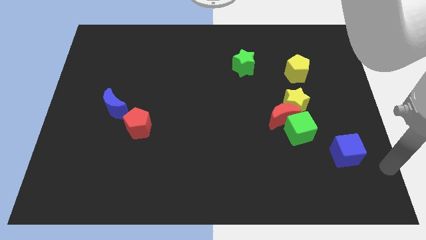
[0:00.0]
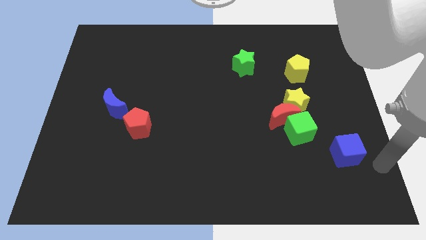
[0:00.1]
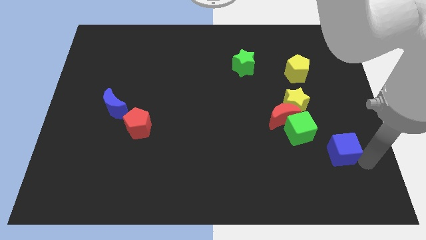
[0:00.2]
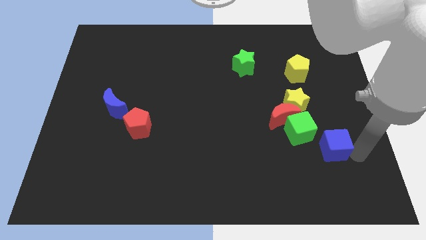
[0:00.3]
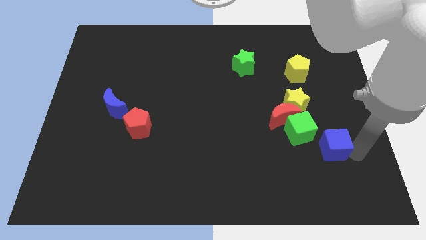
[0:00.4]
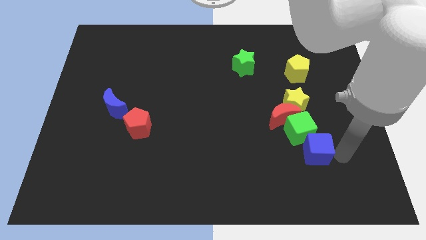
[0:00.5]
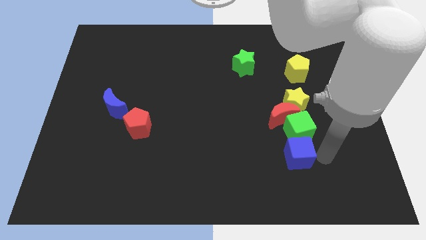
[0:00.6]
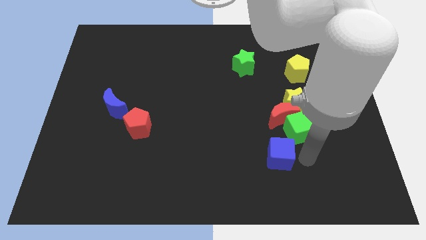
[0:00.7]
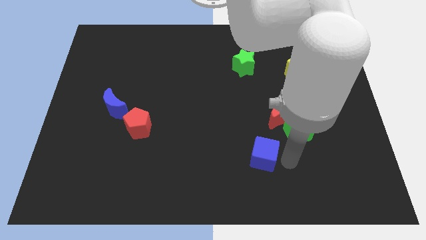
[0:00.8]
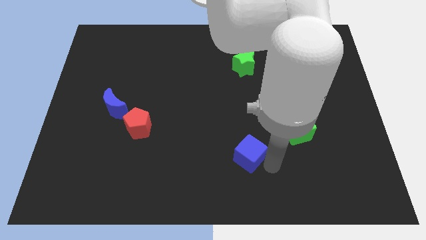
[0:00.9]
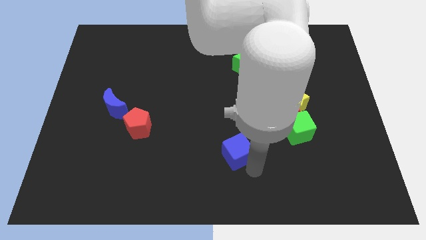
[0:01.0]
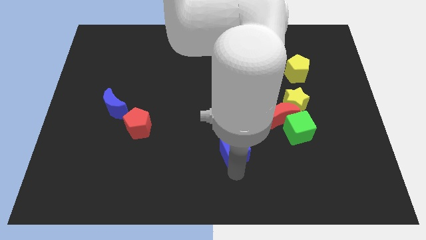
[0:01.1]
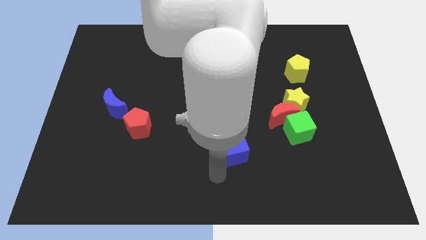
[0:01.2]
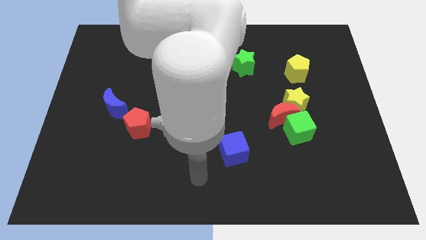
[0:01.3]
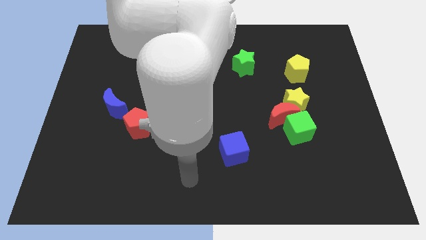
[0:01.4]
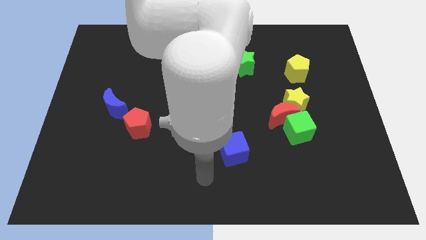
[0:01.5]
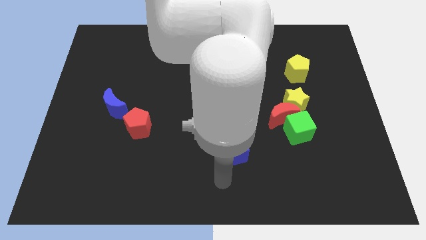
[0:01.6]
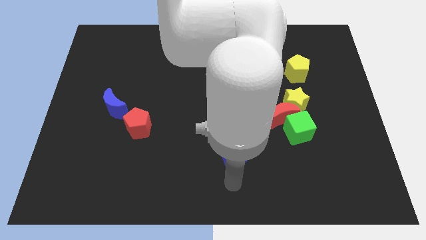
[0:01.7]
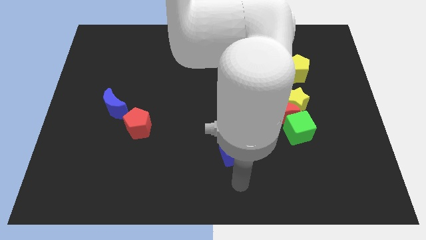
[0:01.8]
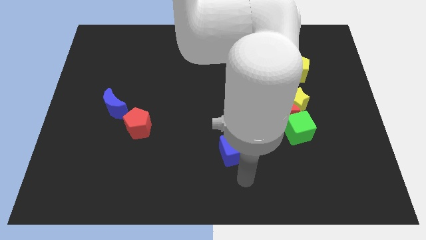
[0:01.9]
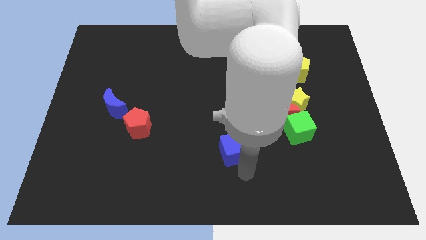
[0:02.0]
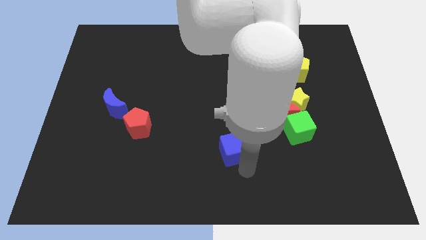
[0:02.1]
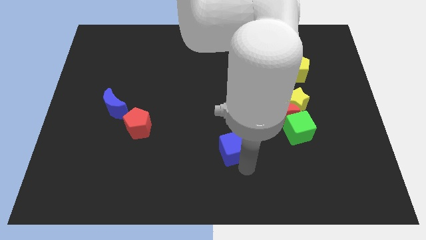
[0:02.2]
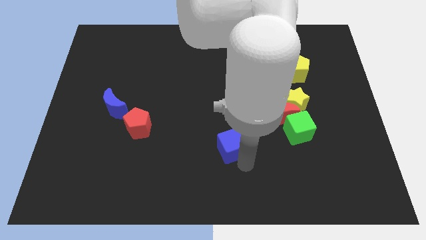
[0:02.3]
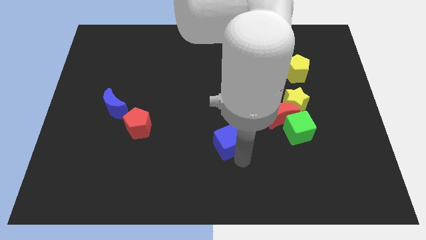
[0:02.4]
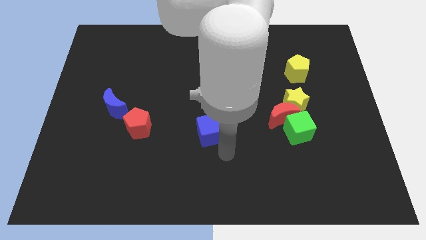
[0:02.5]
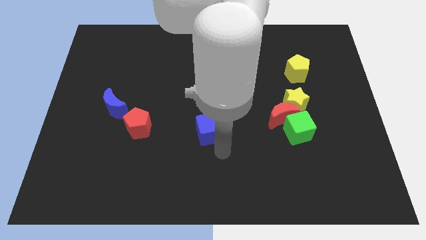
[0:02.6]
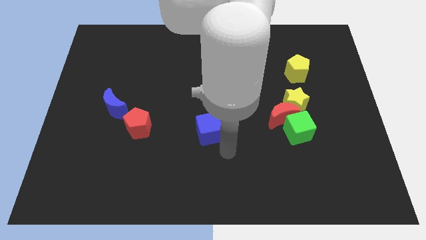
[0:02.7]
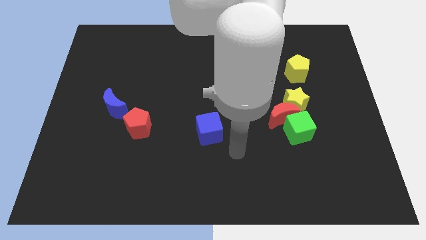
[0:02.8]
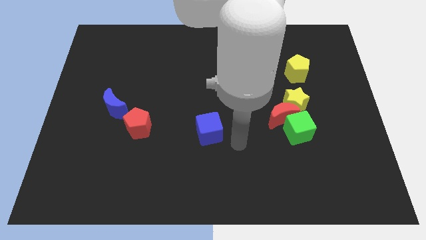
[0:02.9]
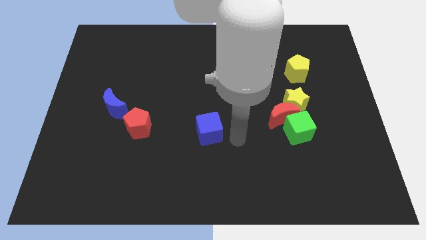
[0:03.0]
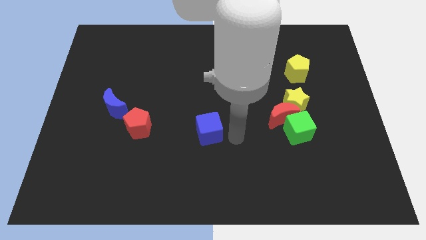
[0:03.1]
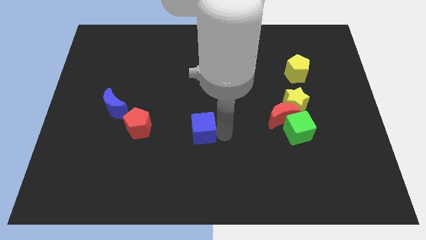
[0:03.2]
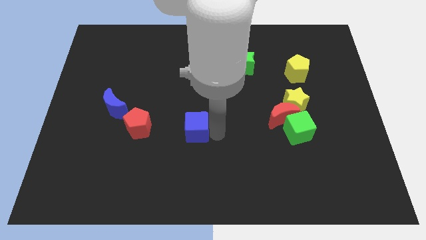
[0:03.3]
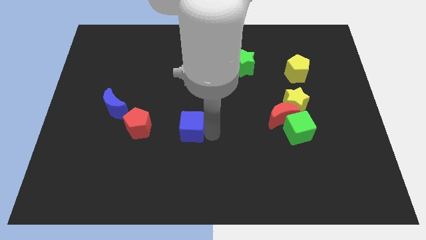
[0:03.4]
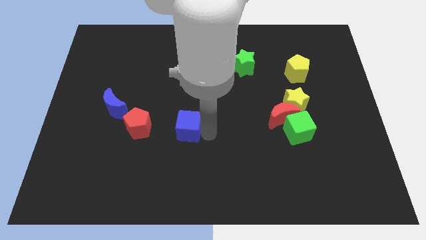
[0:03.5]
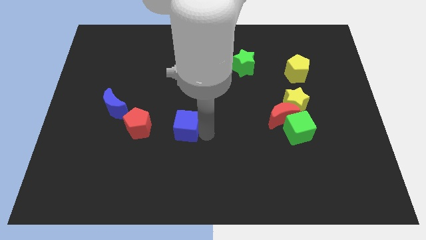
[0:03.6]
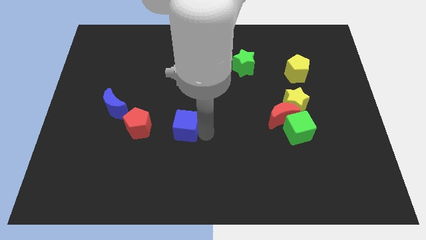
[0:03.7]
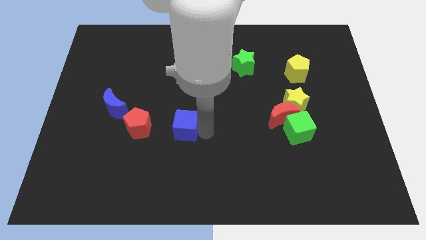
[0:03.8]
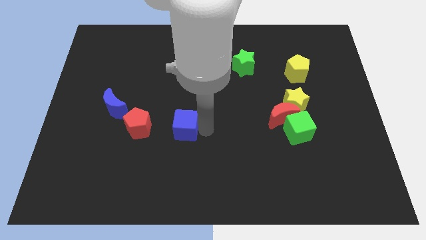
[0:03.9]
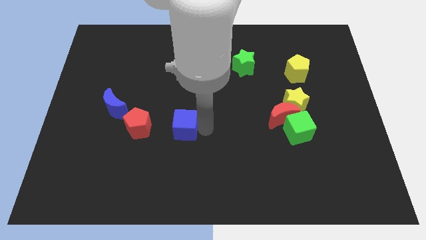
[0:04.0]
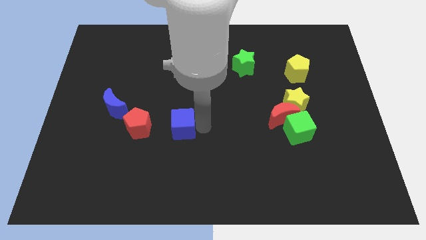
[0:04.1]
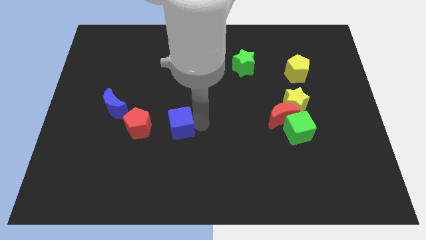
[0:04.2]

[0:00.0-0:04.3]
move the blue cube right to red pentagon

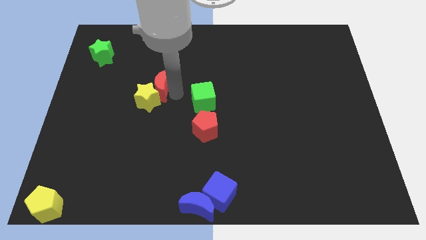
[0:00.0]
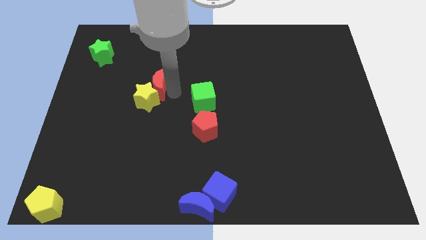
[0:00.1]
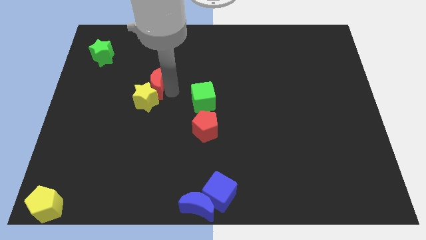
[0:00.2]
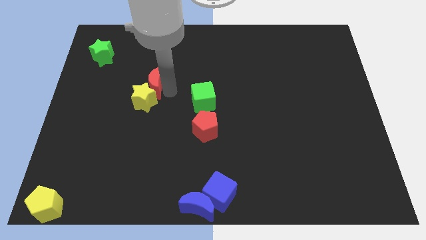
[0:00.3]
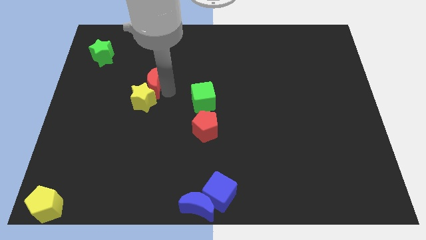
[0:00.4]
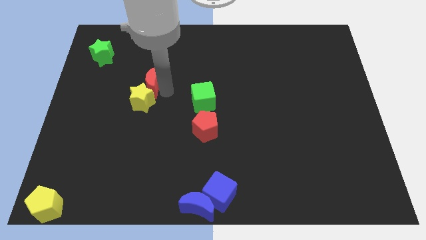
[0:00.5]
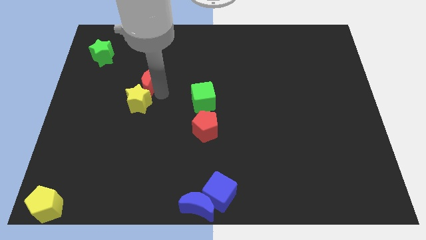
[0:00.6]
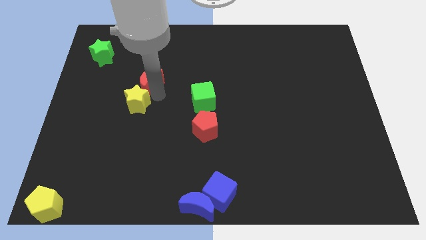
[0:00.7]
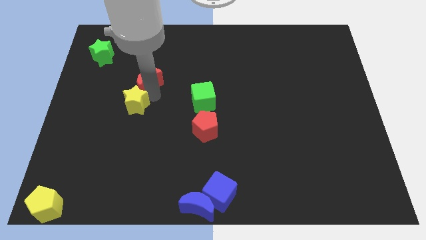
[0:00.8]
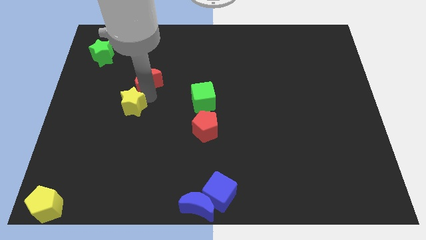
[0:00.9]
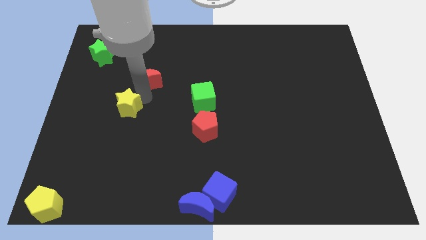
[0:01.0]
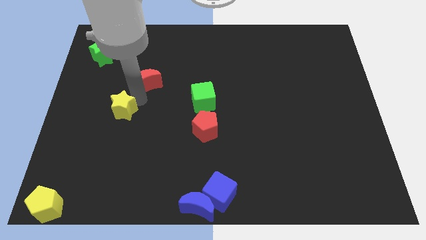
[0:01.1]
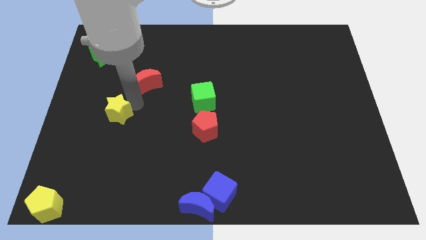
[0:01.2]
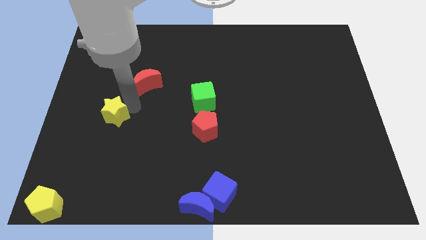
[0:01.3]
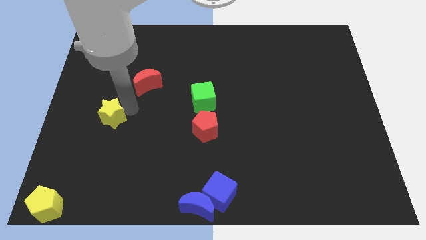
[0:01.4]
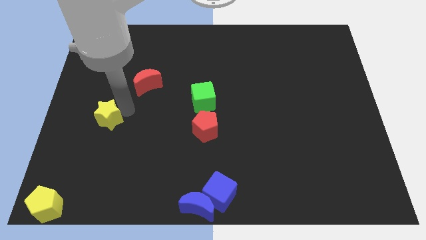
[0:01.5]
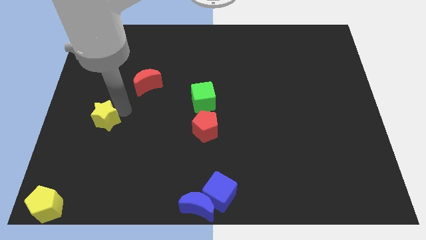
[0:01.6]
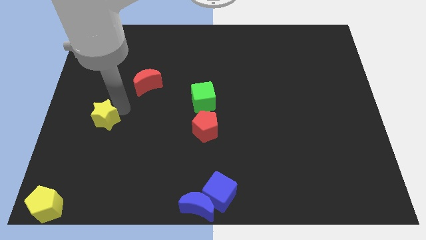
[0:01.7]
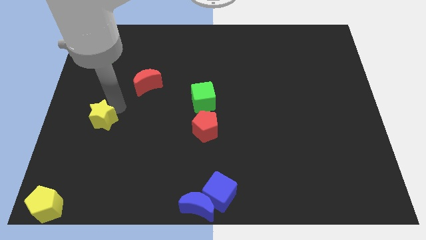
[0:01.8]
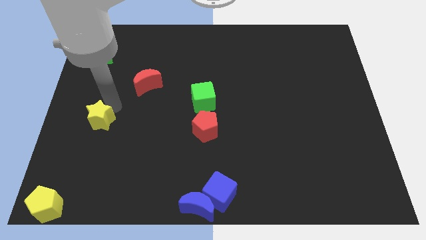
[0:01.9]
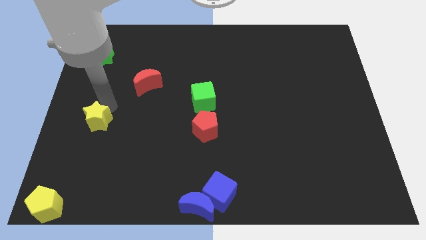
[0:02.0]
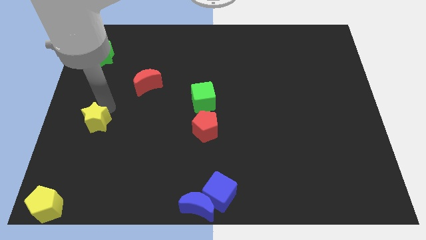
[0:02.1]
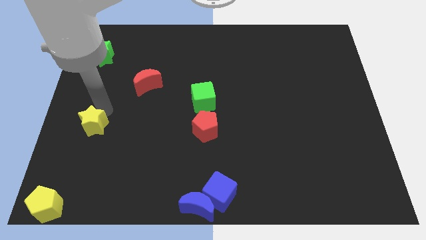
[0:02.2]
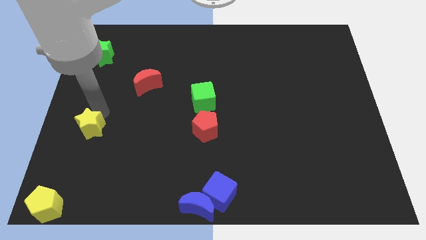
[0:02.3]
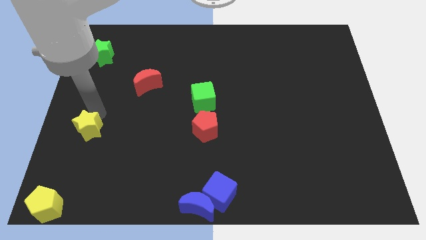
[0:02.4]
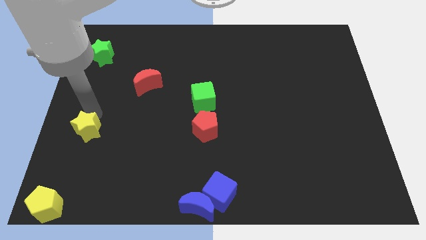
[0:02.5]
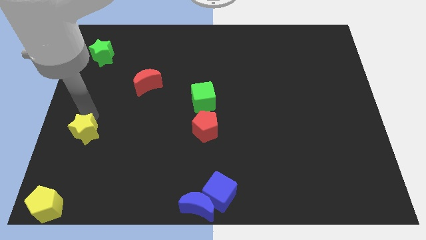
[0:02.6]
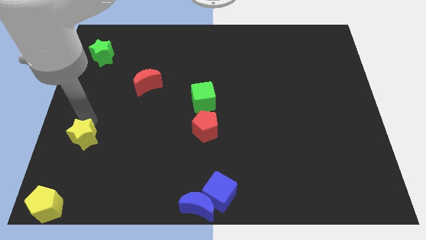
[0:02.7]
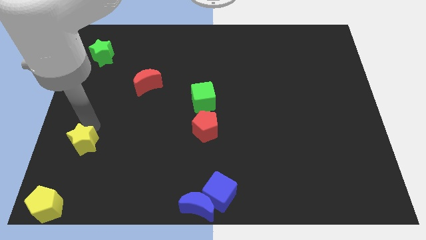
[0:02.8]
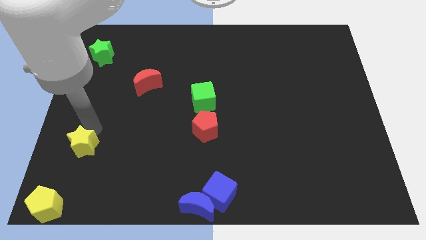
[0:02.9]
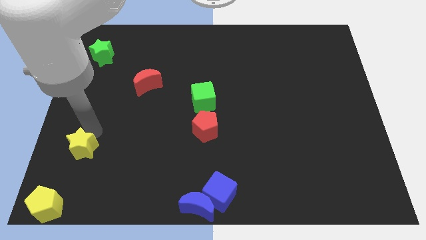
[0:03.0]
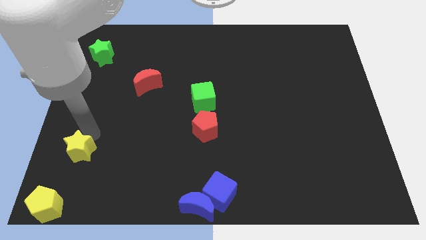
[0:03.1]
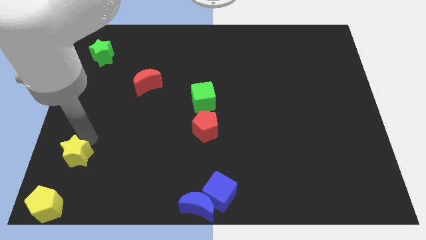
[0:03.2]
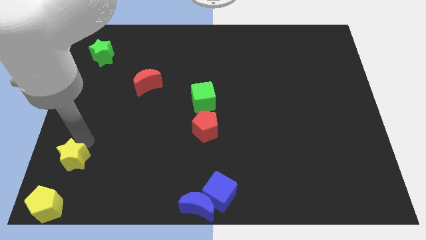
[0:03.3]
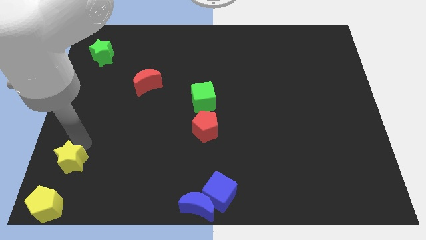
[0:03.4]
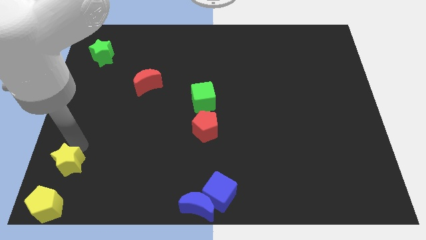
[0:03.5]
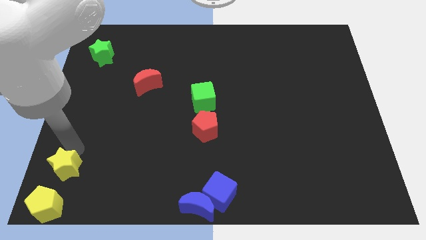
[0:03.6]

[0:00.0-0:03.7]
place the yellow star at the top of yellow pentagon

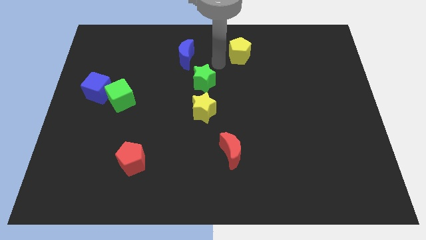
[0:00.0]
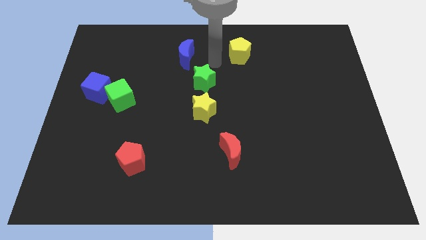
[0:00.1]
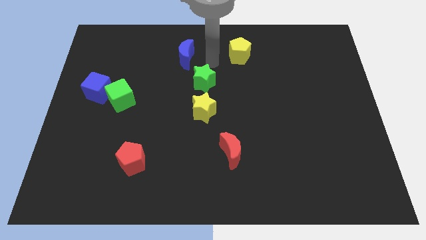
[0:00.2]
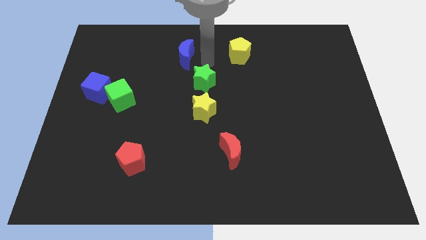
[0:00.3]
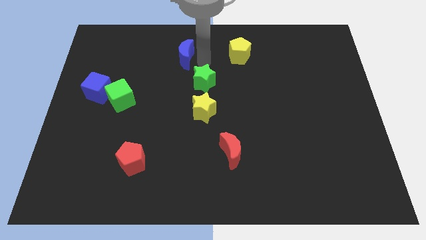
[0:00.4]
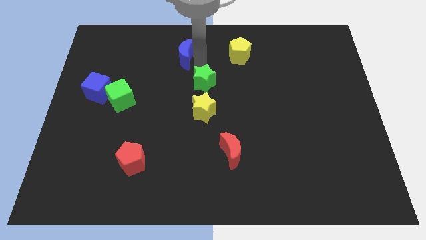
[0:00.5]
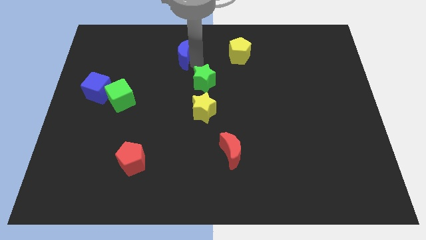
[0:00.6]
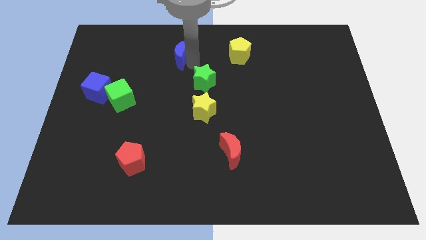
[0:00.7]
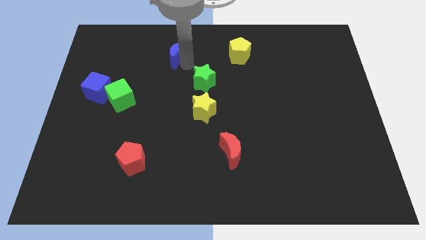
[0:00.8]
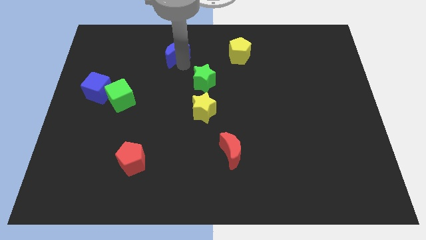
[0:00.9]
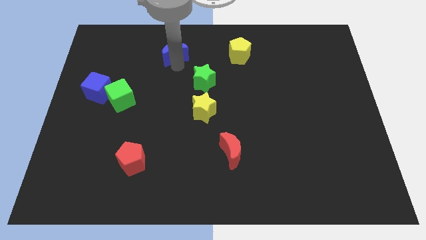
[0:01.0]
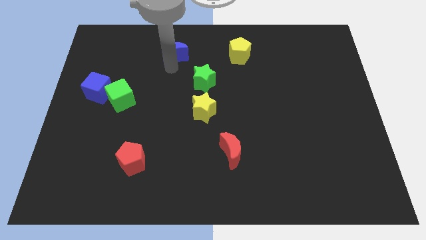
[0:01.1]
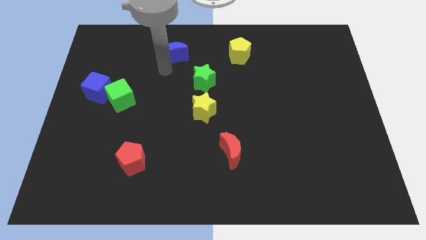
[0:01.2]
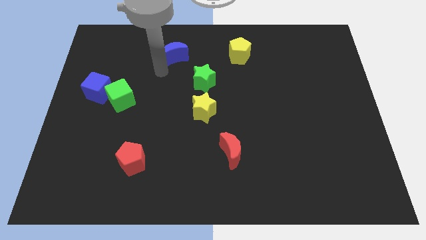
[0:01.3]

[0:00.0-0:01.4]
push blue moon towards its left
